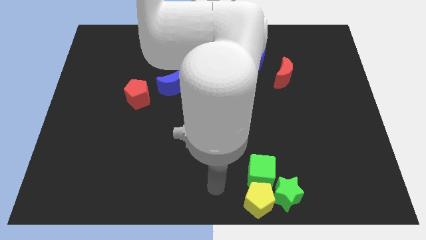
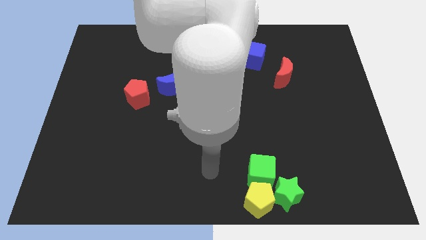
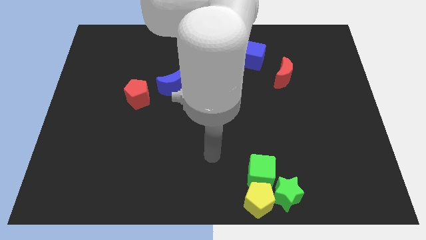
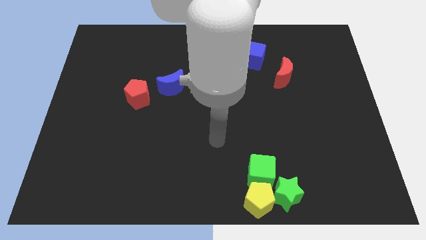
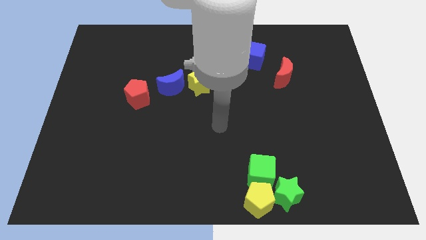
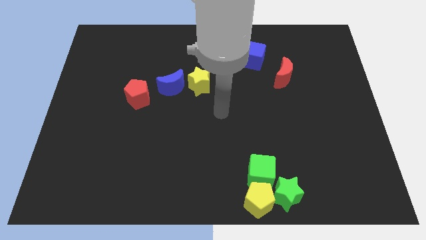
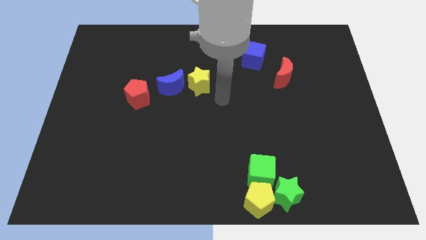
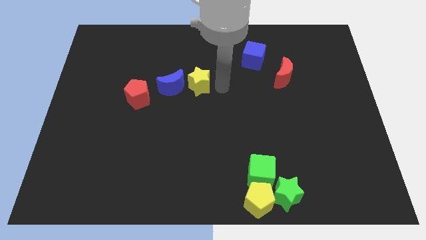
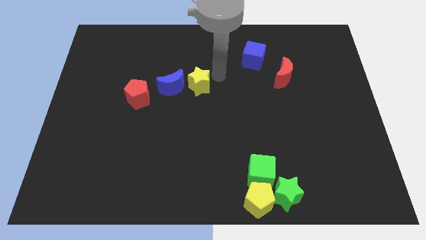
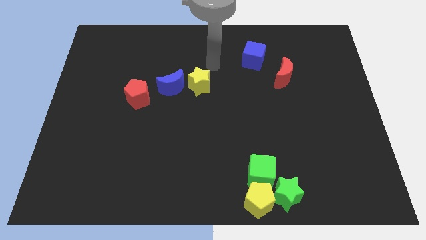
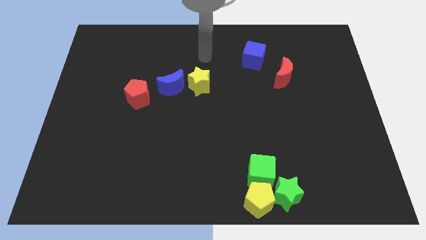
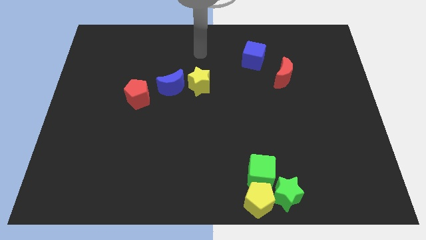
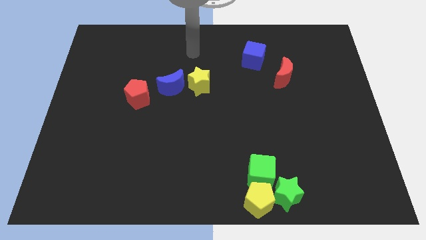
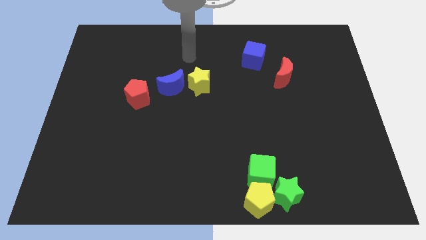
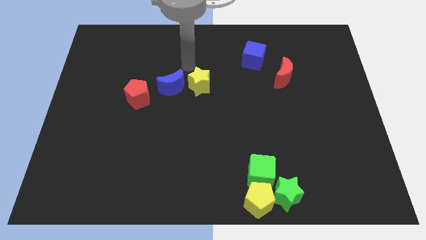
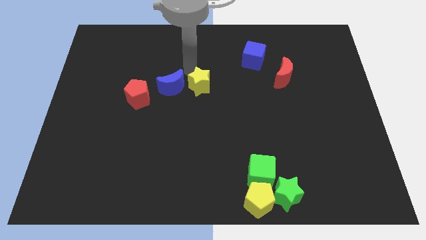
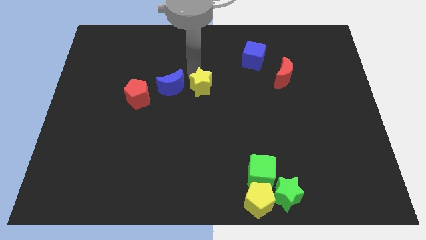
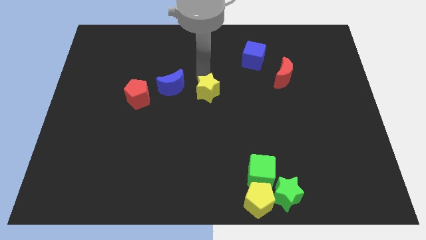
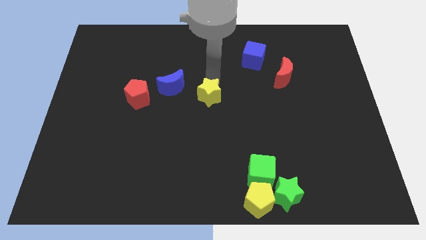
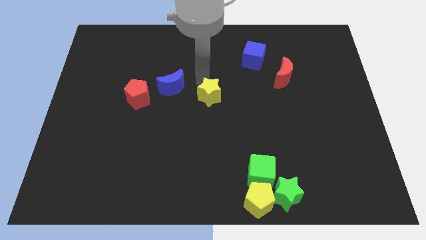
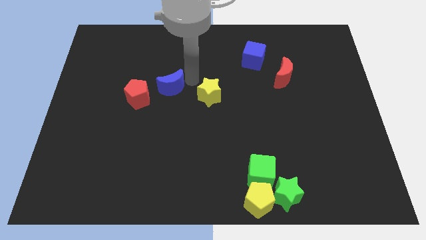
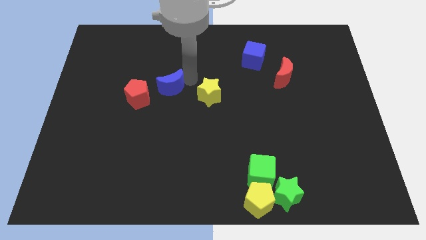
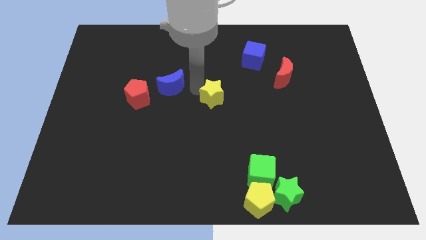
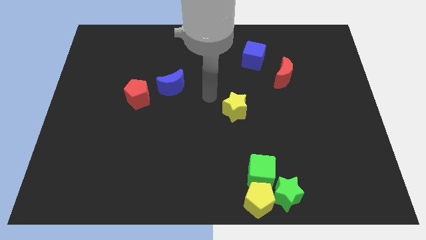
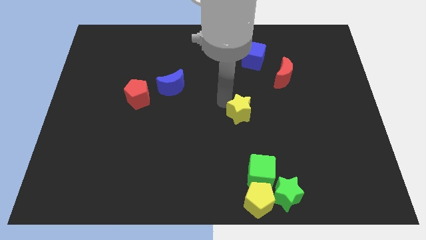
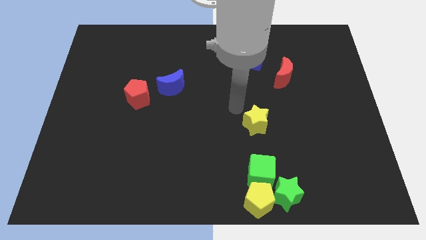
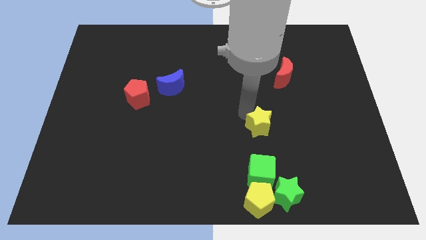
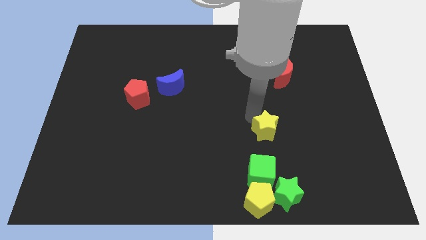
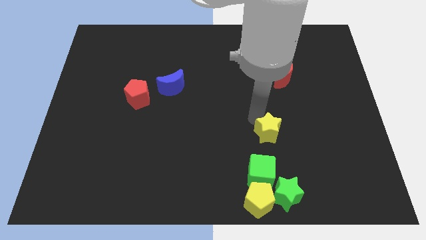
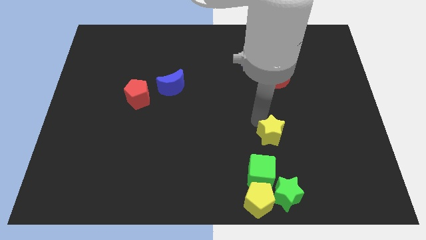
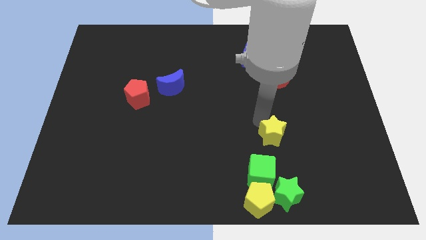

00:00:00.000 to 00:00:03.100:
place yellow star at the top of the green cube

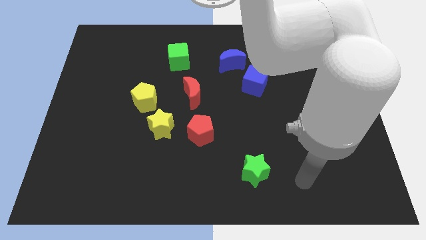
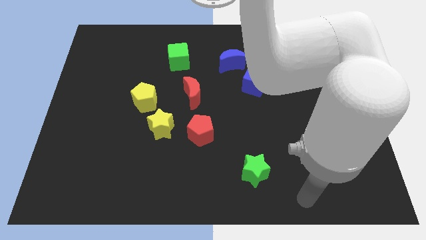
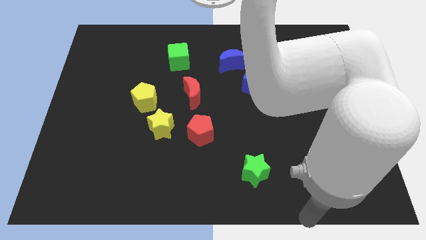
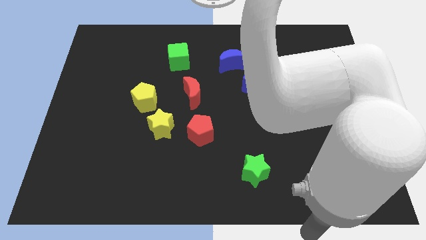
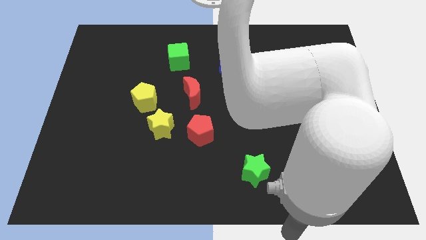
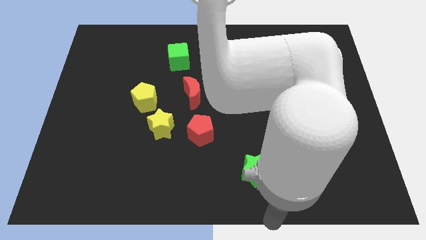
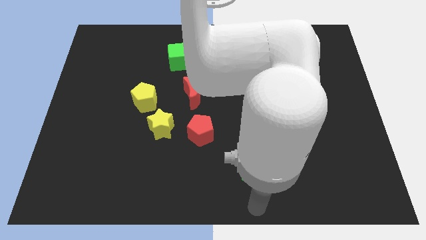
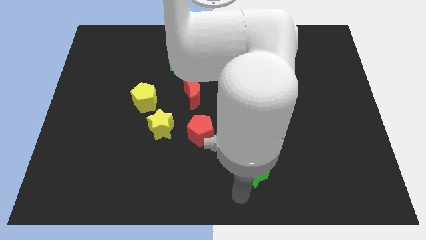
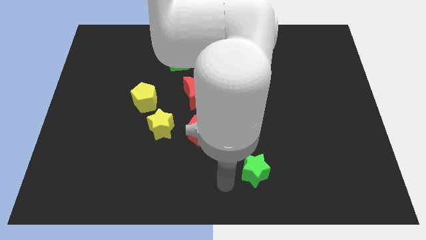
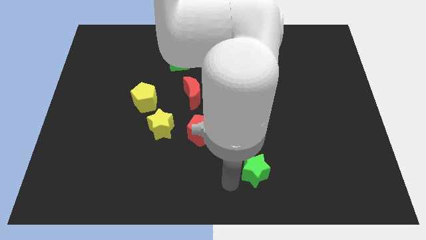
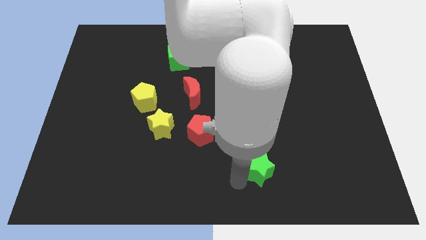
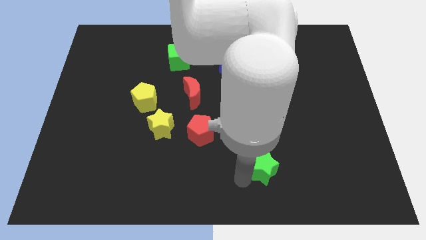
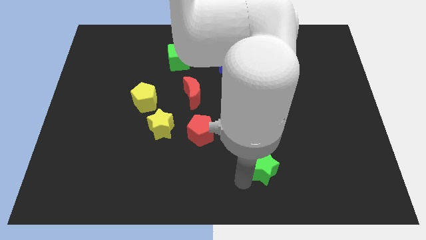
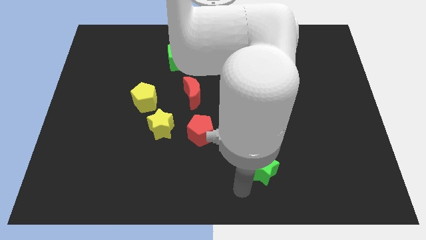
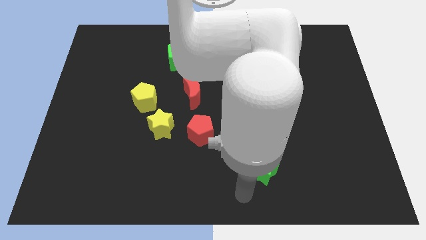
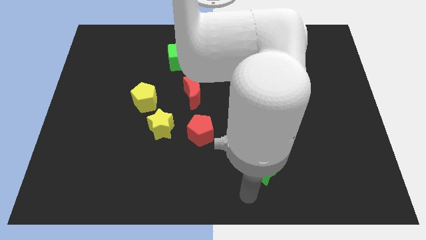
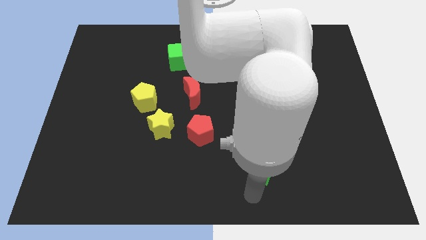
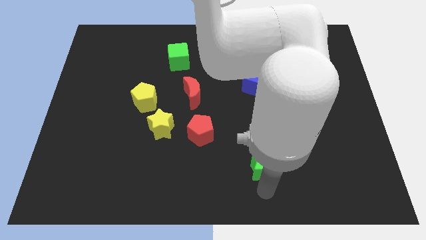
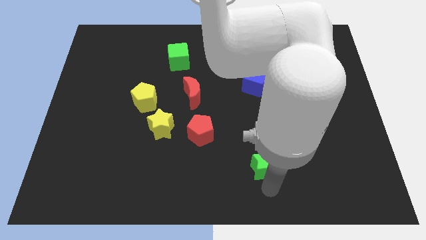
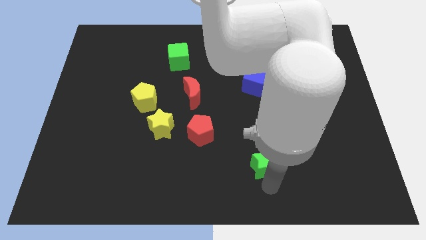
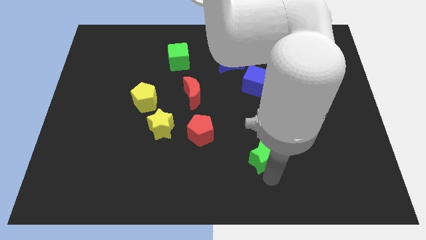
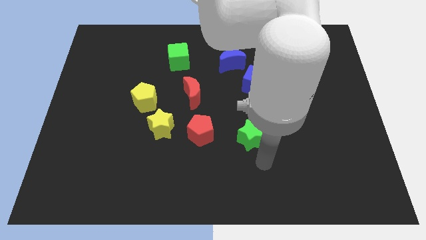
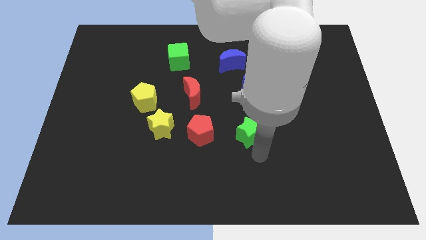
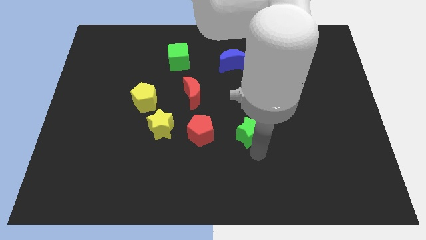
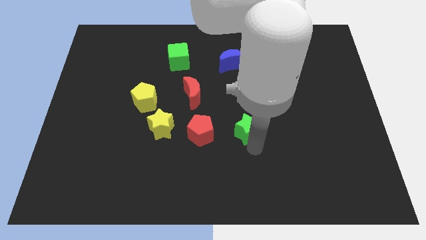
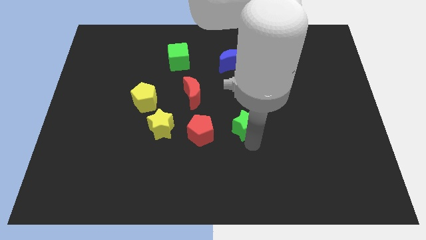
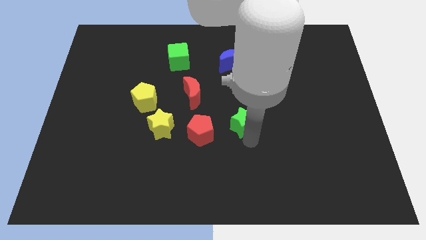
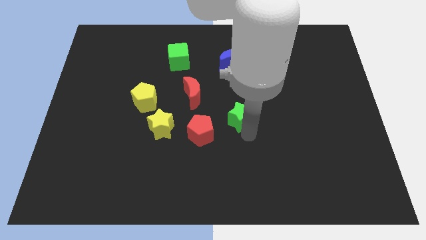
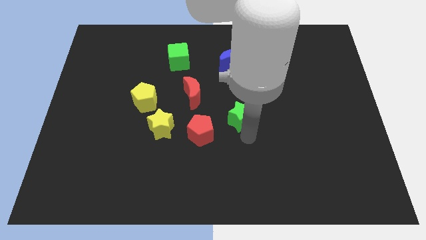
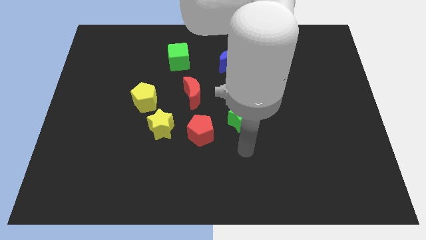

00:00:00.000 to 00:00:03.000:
move the green star to the right side of the red pentagon

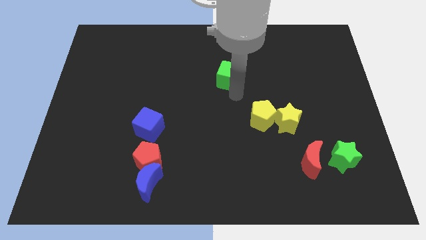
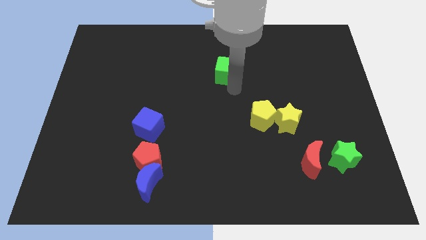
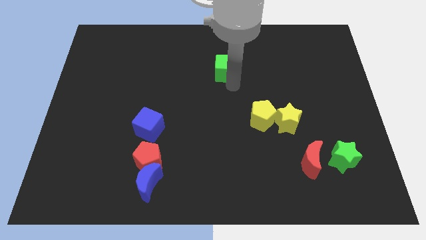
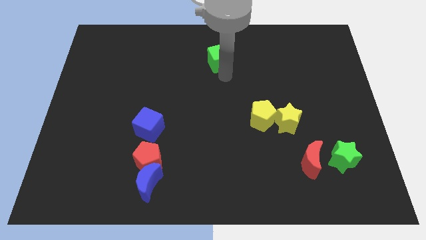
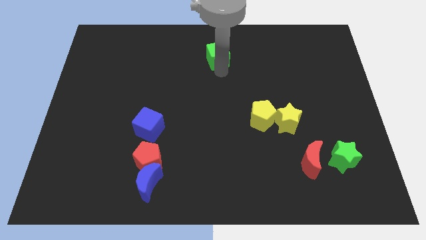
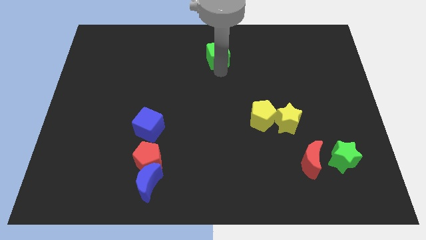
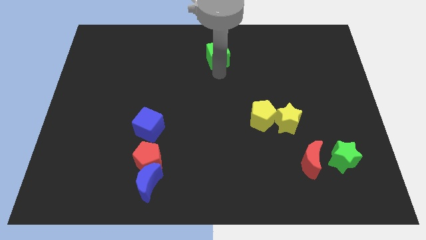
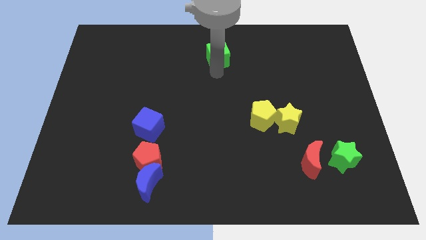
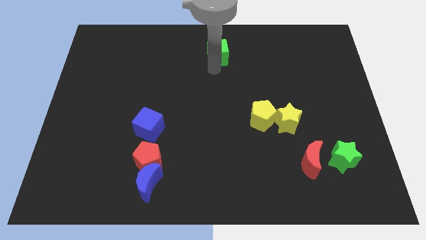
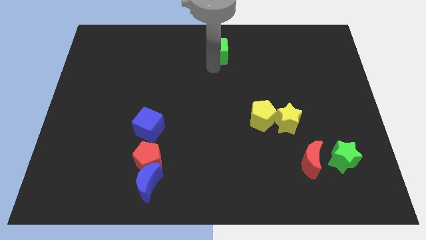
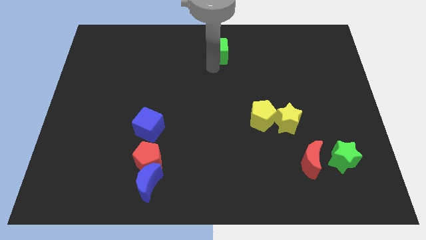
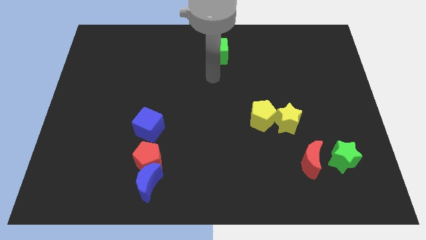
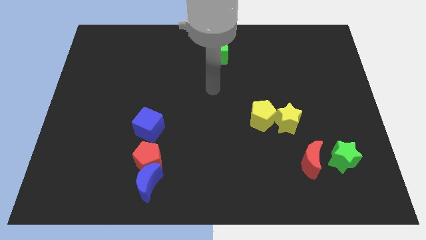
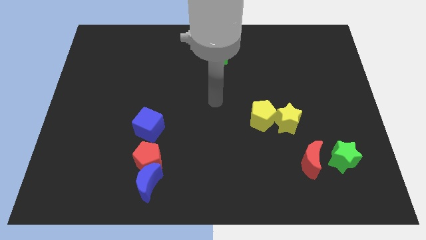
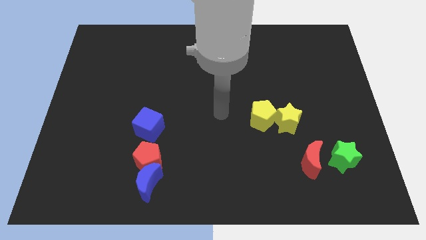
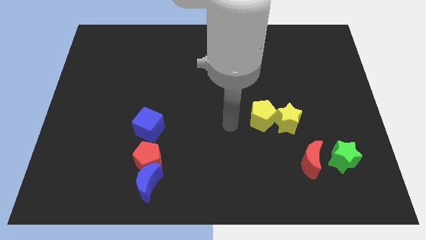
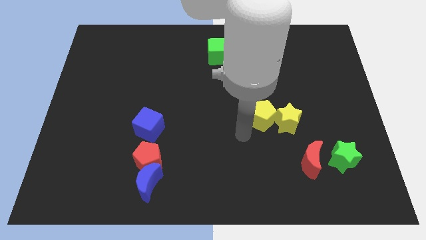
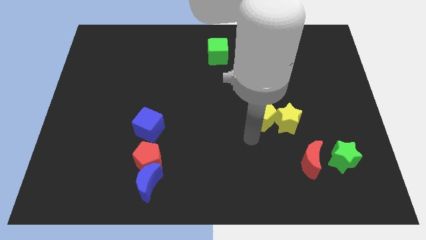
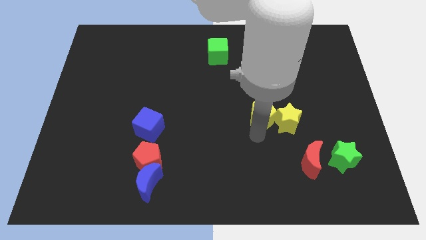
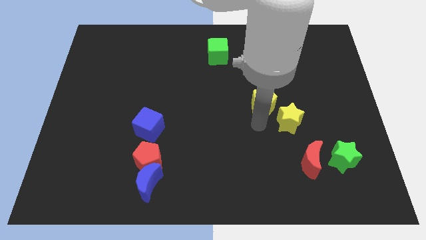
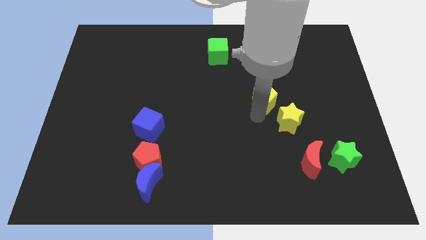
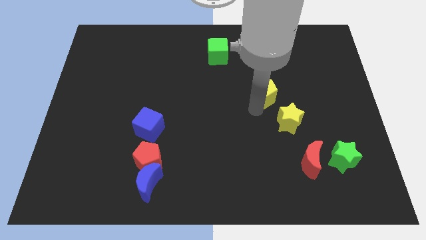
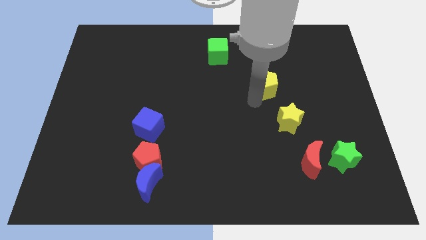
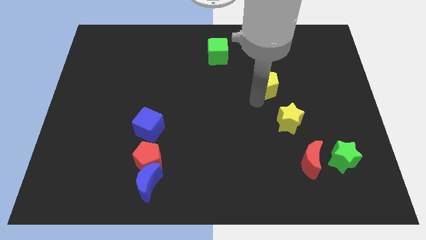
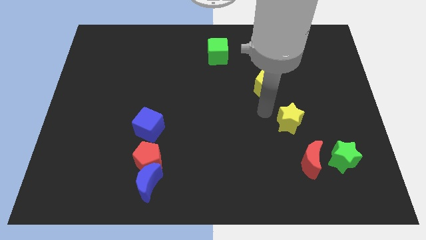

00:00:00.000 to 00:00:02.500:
move the green cube towards the top center of the board

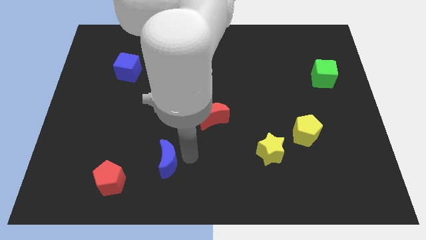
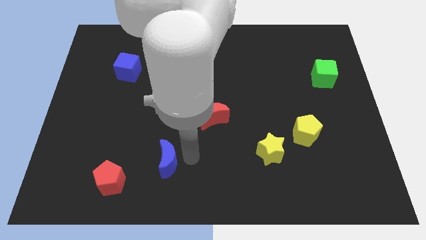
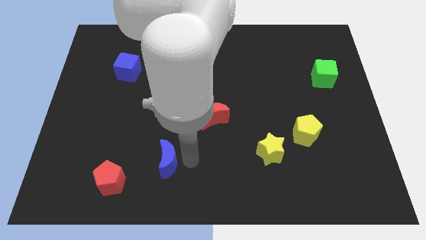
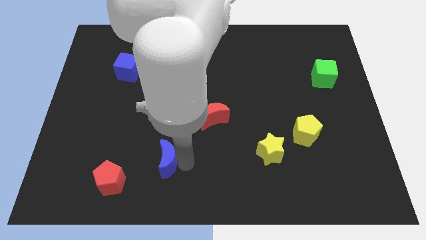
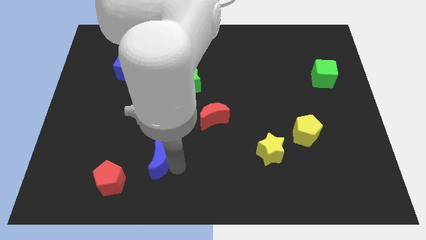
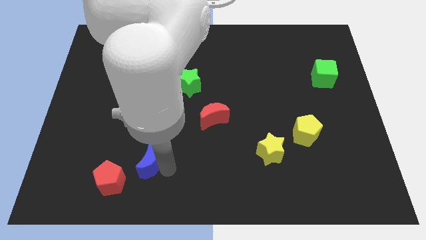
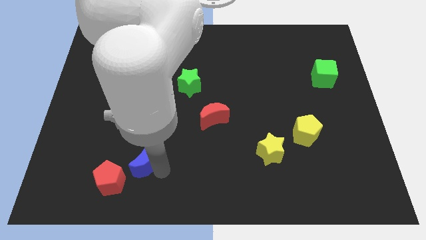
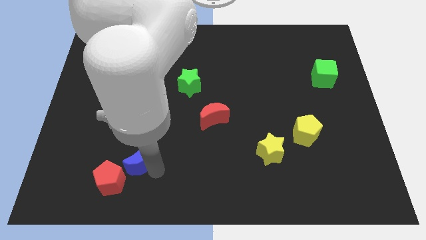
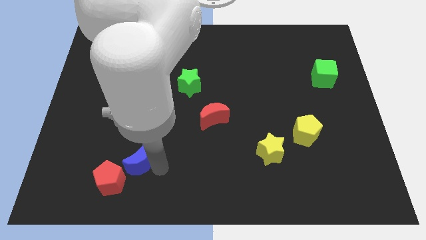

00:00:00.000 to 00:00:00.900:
push the blue crescent close to the red pentagon
